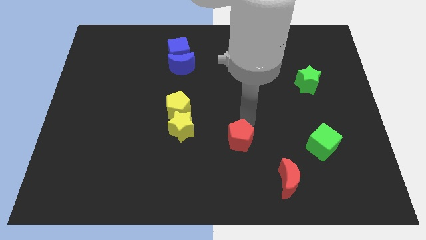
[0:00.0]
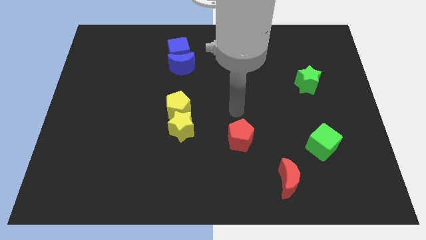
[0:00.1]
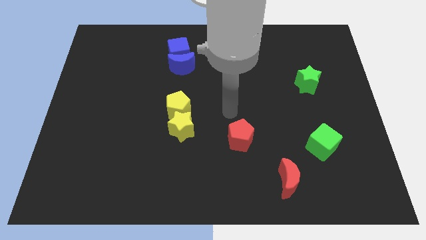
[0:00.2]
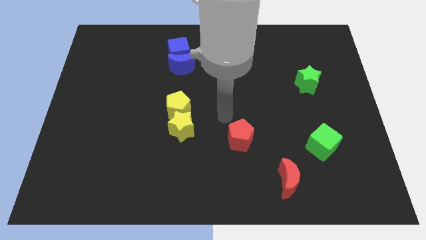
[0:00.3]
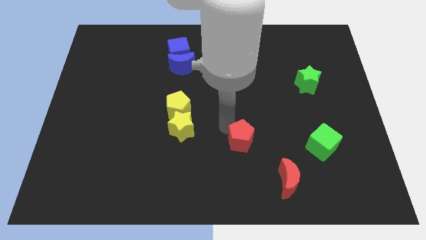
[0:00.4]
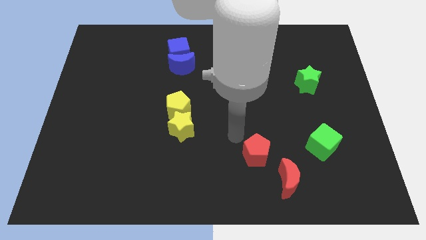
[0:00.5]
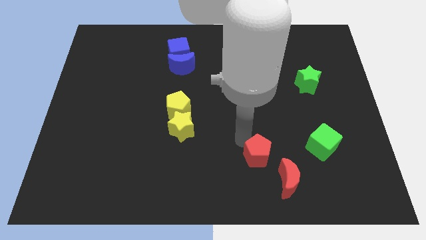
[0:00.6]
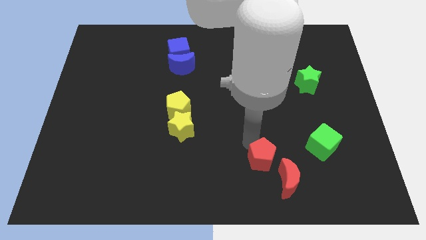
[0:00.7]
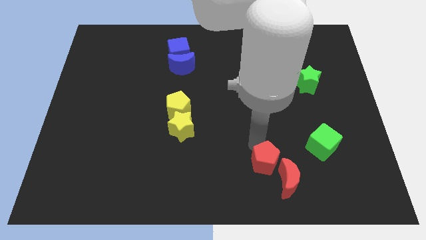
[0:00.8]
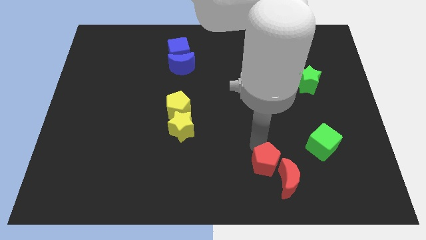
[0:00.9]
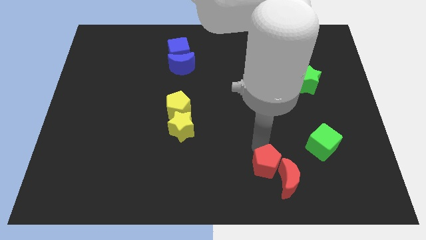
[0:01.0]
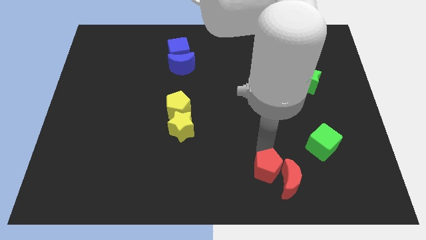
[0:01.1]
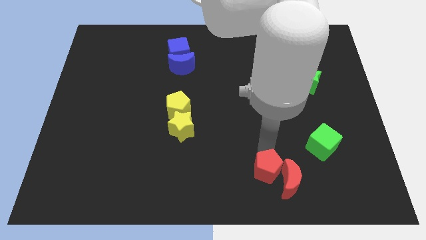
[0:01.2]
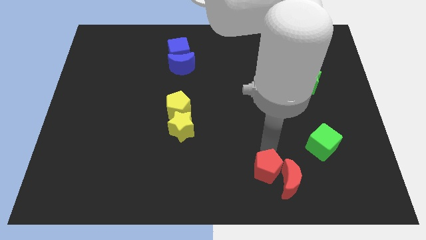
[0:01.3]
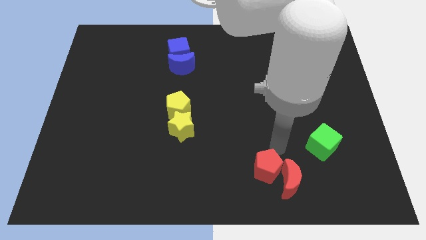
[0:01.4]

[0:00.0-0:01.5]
push the red pentagon into the left of the red crescent

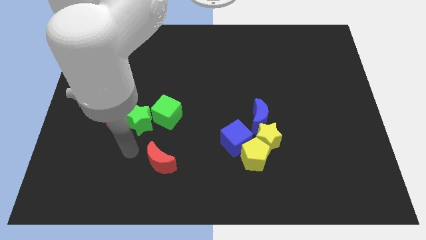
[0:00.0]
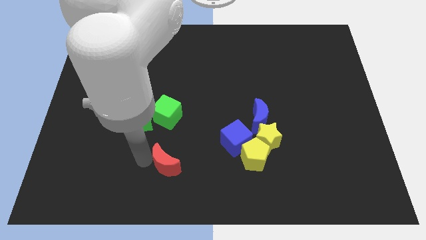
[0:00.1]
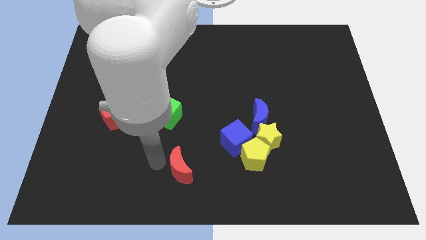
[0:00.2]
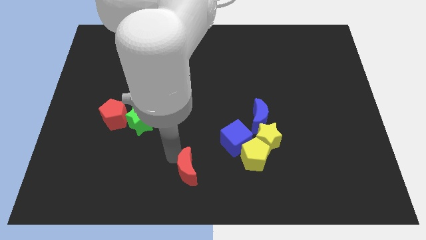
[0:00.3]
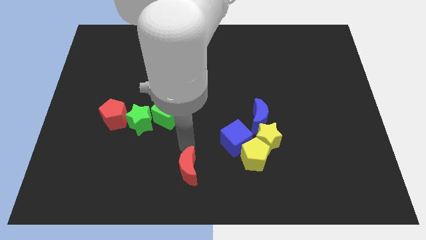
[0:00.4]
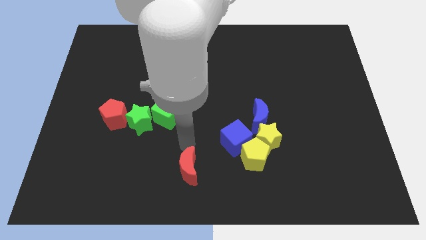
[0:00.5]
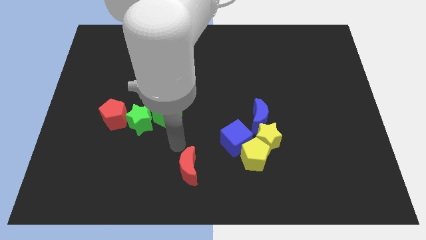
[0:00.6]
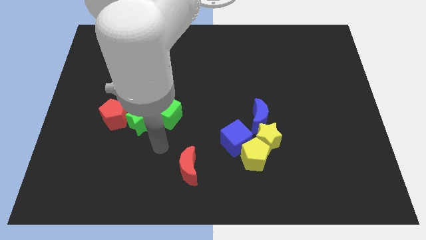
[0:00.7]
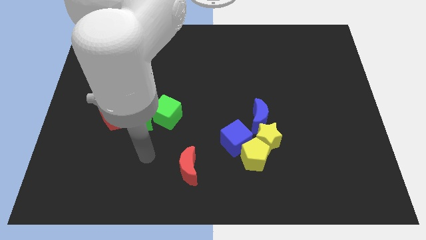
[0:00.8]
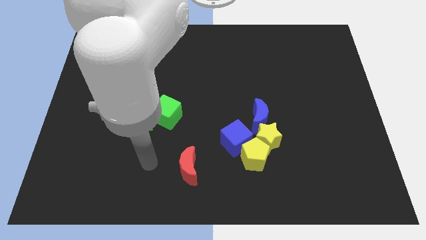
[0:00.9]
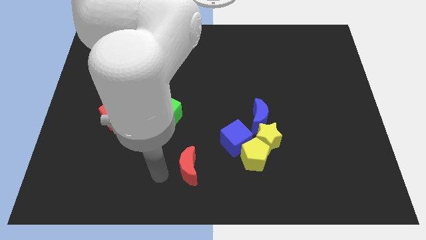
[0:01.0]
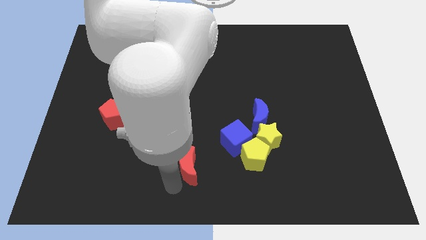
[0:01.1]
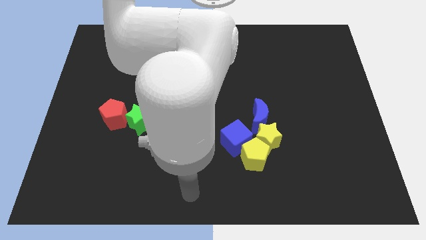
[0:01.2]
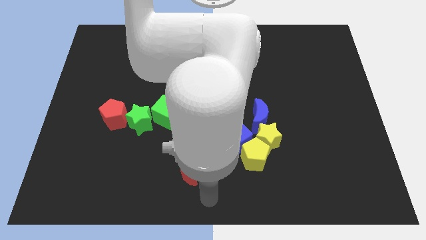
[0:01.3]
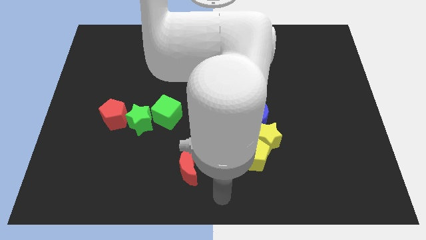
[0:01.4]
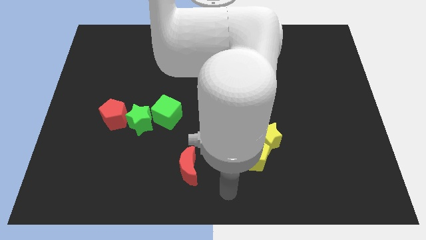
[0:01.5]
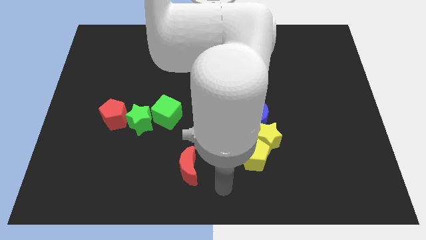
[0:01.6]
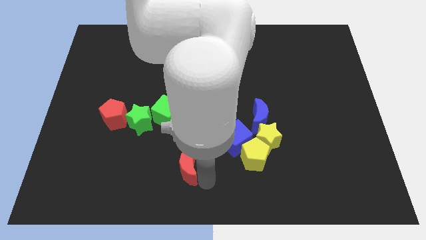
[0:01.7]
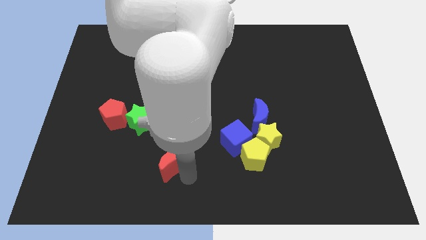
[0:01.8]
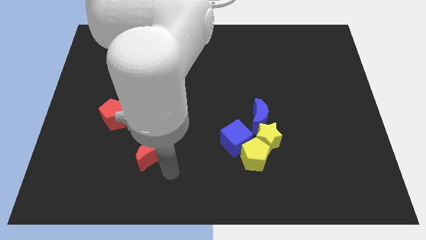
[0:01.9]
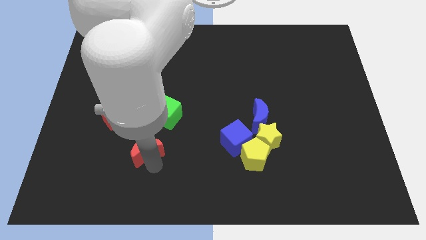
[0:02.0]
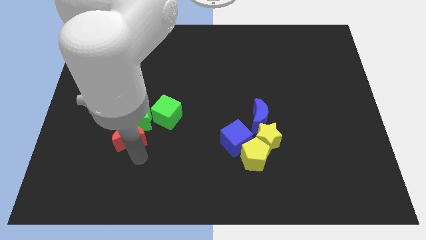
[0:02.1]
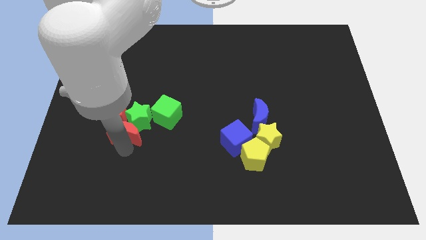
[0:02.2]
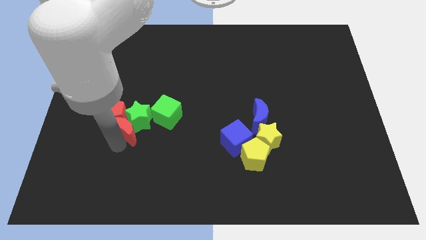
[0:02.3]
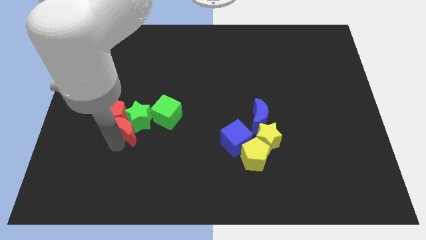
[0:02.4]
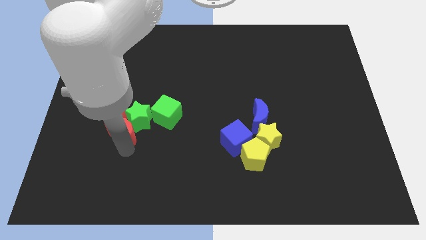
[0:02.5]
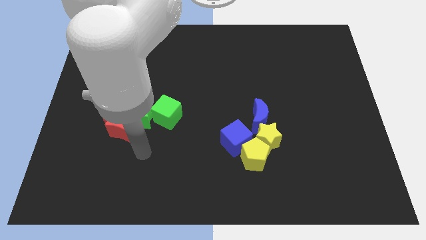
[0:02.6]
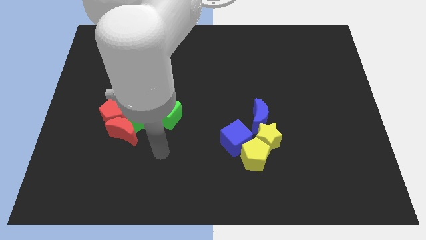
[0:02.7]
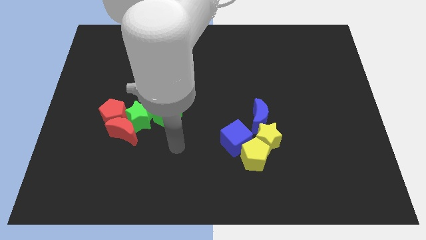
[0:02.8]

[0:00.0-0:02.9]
move the red crescent to the bottom of the red pentagon

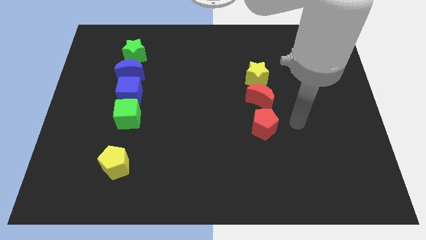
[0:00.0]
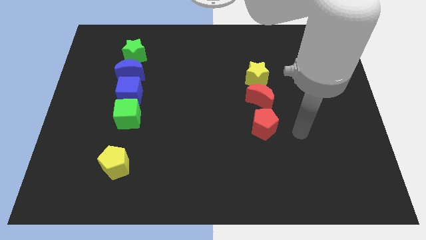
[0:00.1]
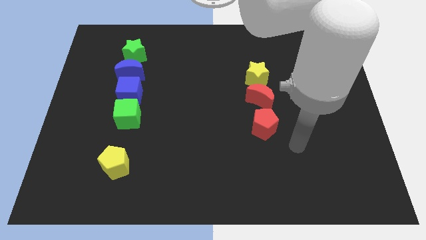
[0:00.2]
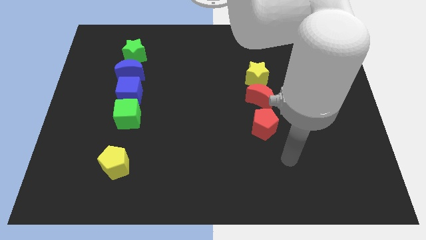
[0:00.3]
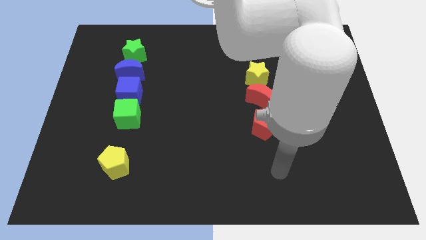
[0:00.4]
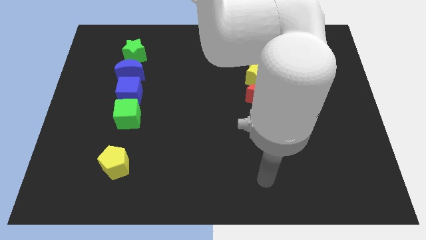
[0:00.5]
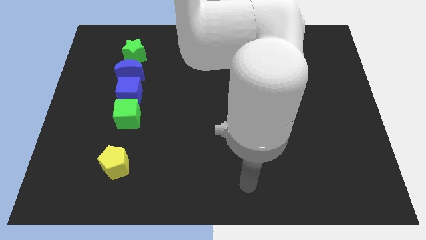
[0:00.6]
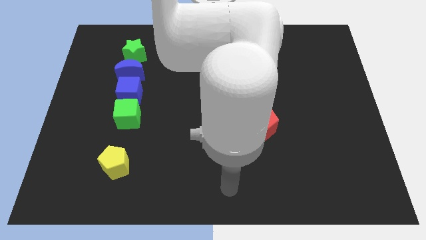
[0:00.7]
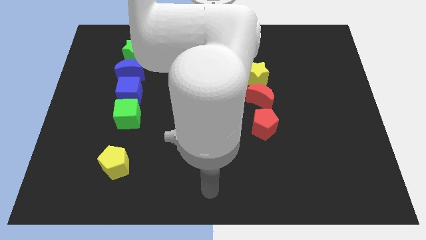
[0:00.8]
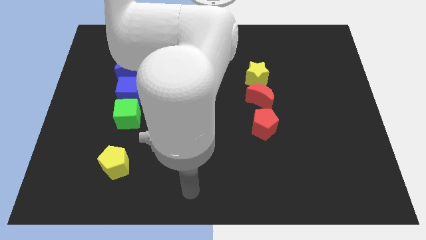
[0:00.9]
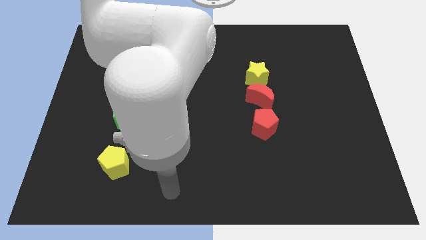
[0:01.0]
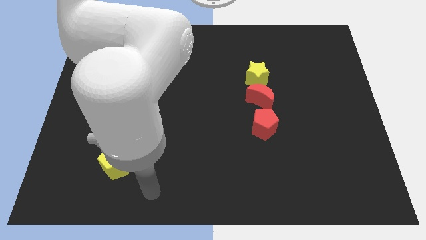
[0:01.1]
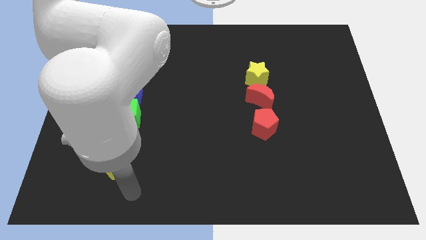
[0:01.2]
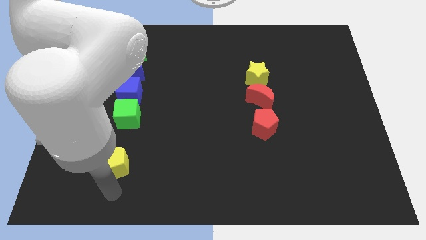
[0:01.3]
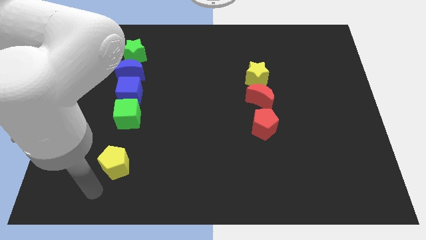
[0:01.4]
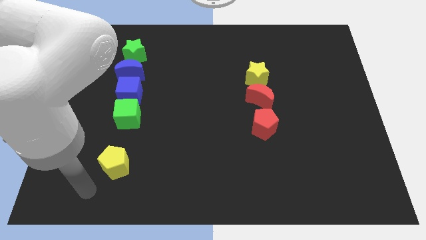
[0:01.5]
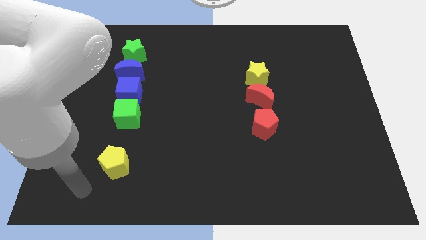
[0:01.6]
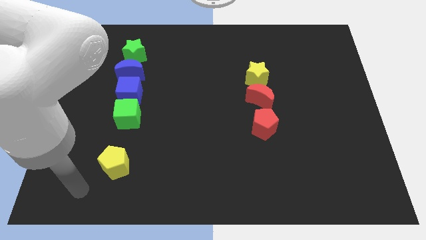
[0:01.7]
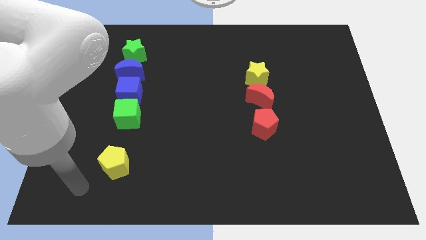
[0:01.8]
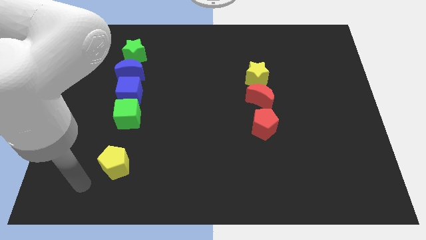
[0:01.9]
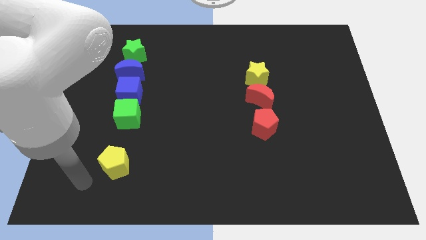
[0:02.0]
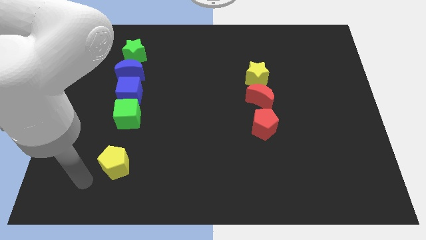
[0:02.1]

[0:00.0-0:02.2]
move your hand away from the red pentagon

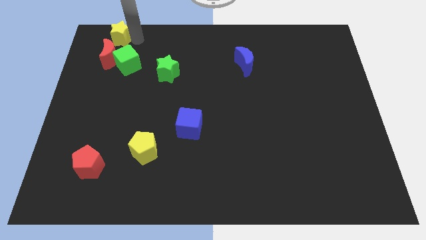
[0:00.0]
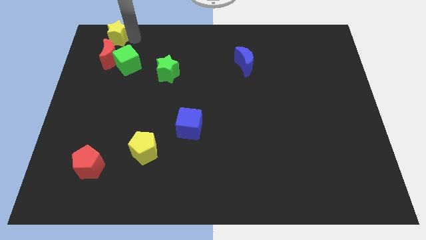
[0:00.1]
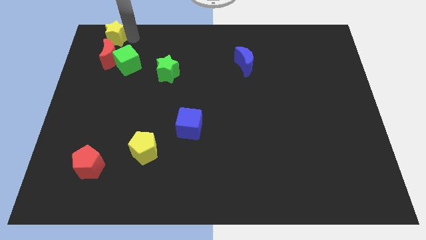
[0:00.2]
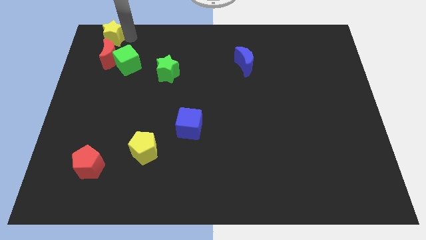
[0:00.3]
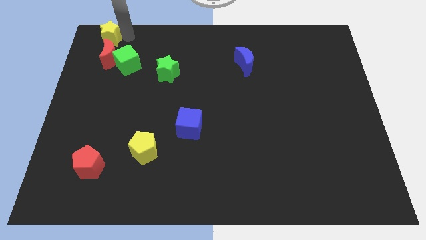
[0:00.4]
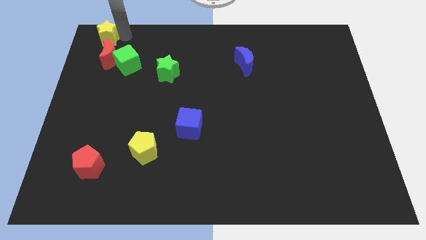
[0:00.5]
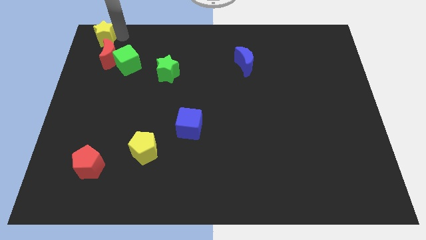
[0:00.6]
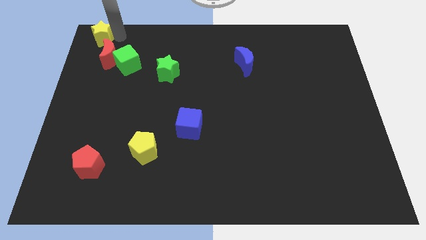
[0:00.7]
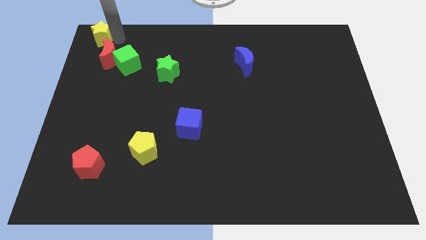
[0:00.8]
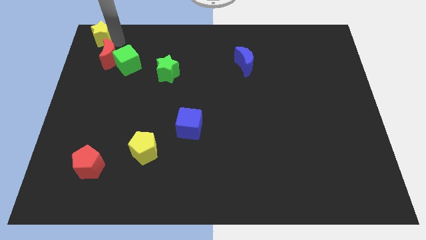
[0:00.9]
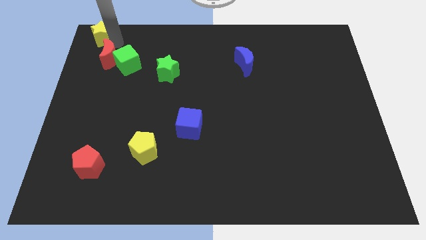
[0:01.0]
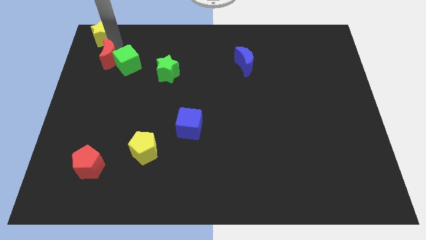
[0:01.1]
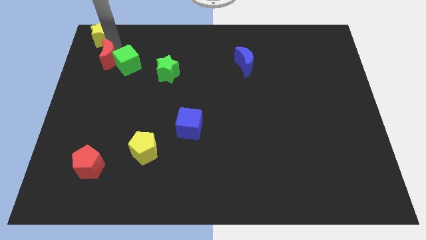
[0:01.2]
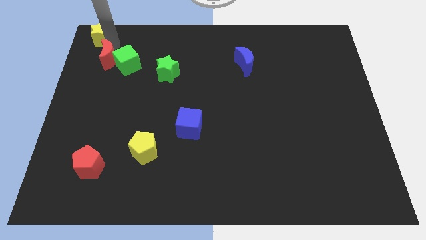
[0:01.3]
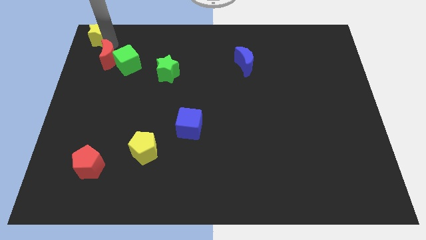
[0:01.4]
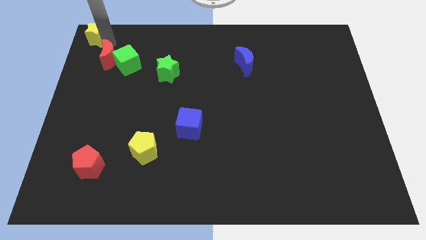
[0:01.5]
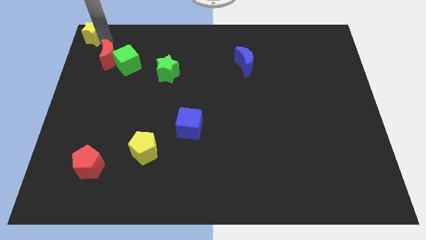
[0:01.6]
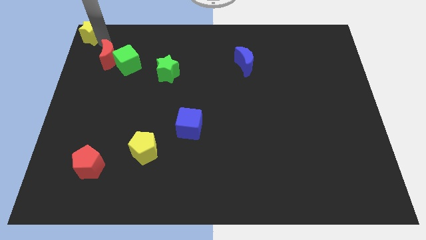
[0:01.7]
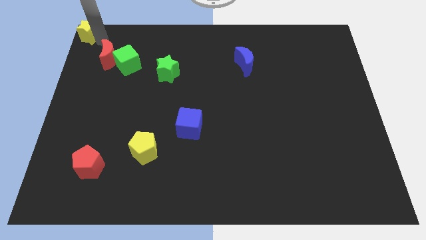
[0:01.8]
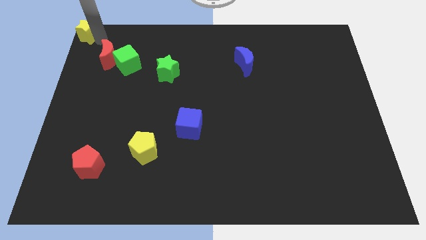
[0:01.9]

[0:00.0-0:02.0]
move the yellow star to the top left corner

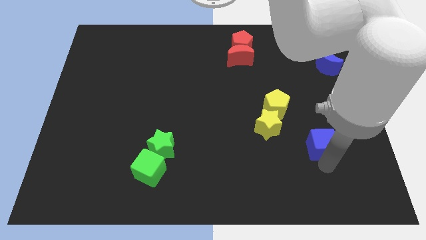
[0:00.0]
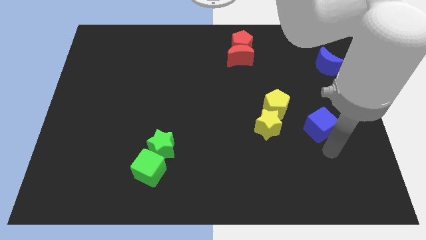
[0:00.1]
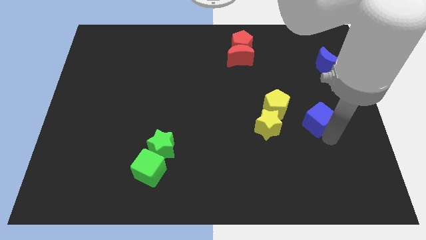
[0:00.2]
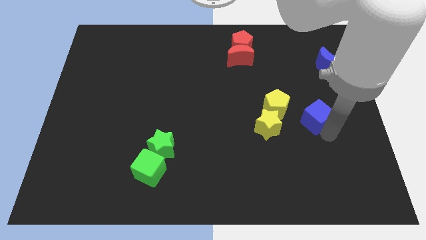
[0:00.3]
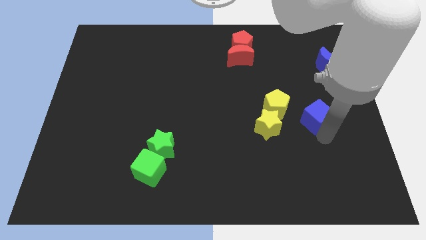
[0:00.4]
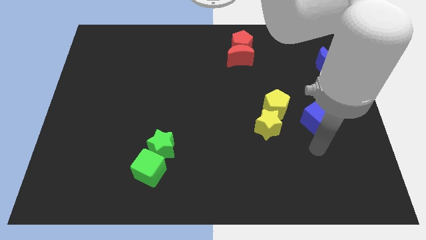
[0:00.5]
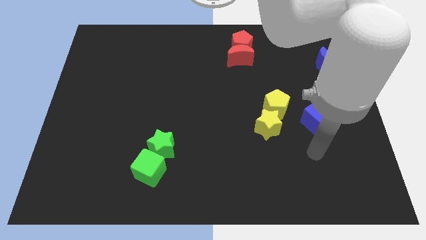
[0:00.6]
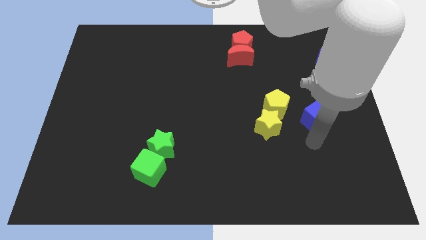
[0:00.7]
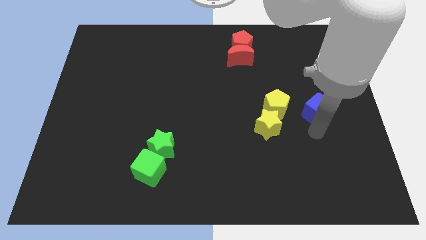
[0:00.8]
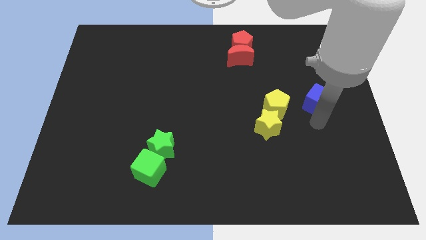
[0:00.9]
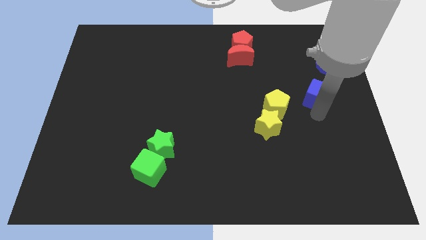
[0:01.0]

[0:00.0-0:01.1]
place the blue cube to the right of the yellow pentagon
